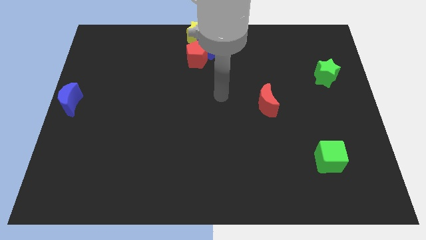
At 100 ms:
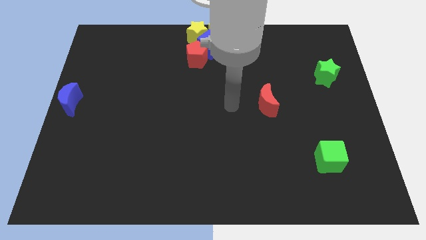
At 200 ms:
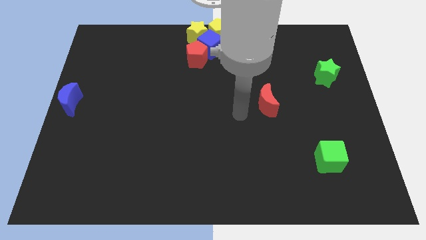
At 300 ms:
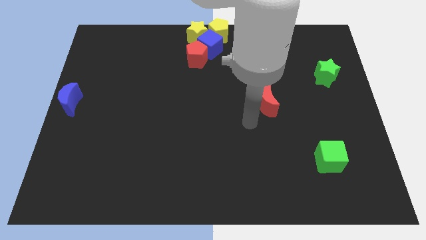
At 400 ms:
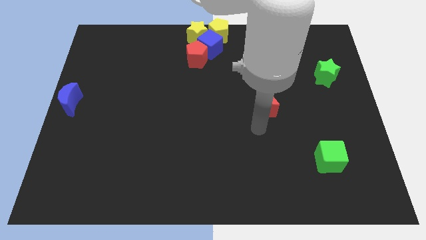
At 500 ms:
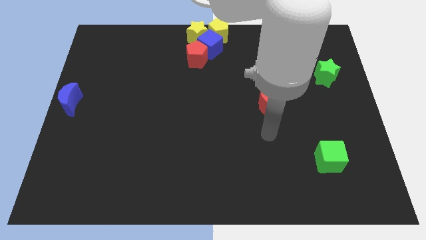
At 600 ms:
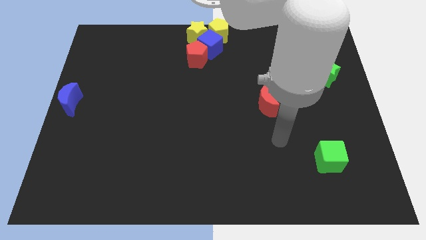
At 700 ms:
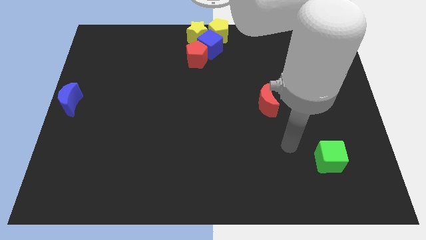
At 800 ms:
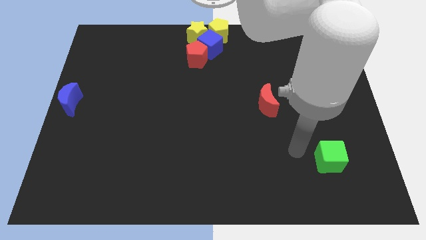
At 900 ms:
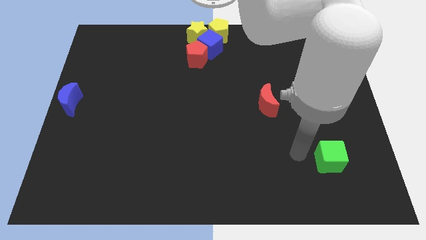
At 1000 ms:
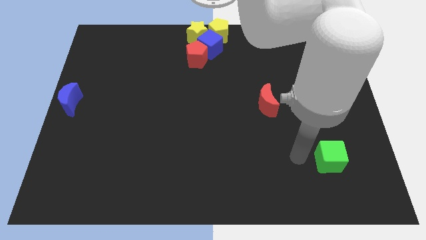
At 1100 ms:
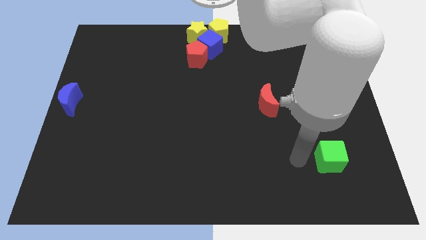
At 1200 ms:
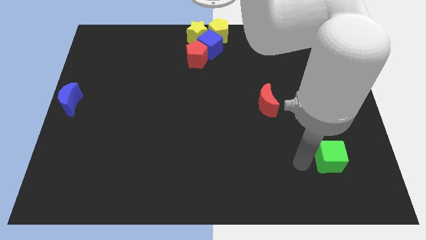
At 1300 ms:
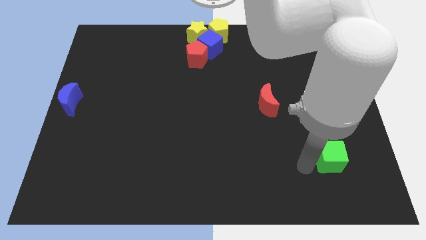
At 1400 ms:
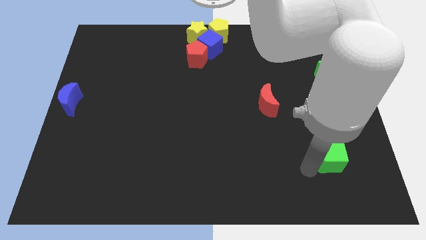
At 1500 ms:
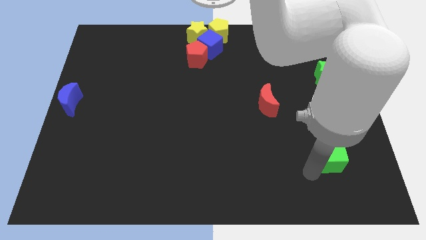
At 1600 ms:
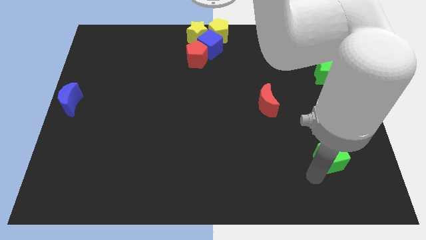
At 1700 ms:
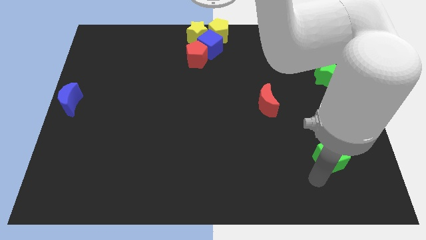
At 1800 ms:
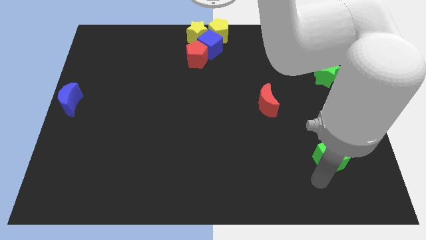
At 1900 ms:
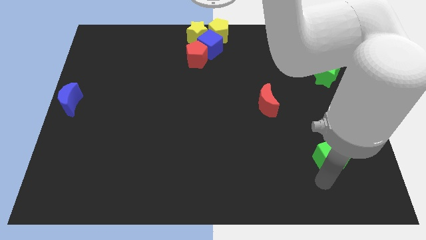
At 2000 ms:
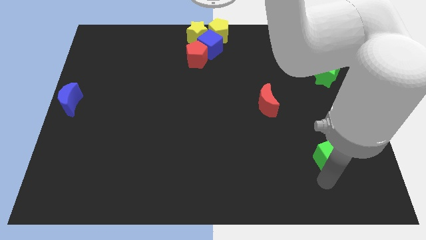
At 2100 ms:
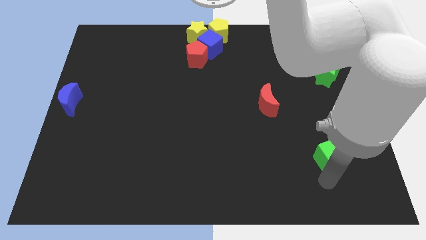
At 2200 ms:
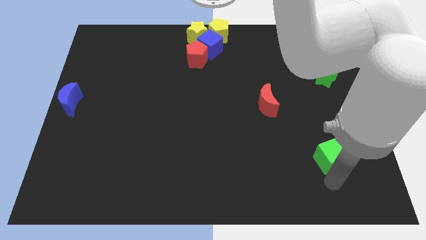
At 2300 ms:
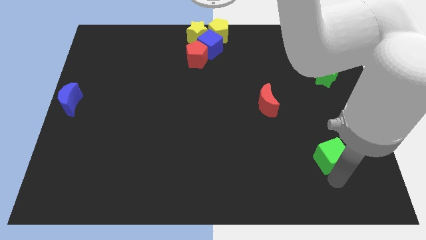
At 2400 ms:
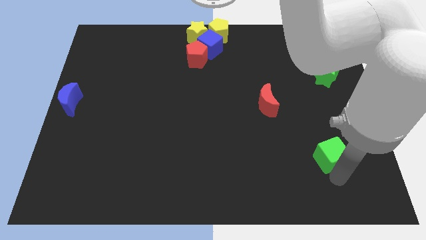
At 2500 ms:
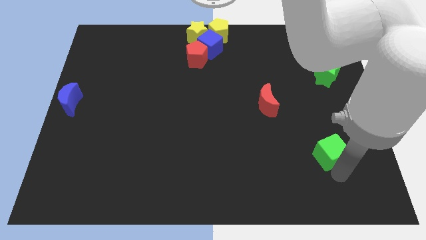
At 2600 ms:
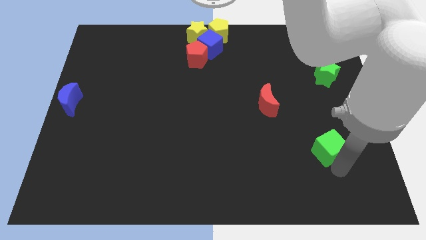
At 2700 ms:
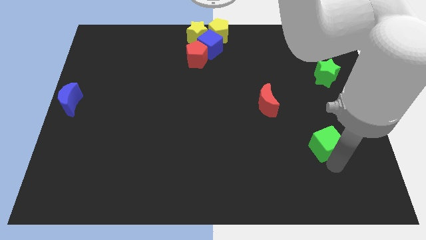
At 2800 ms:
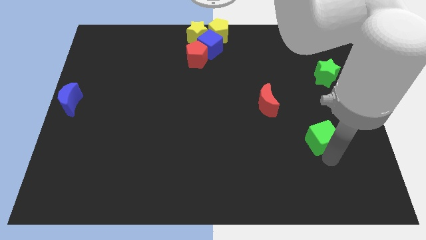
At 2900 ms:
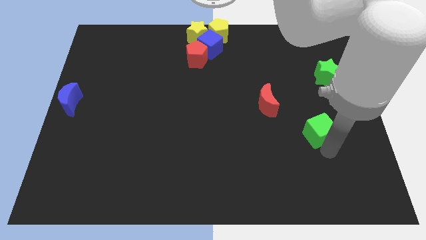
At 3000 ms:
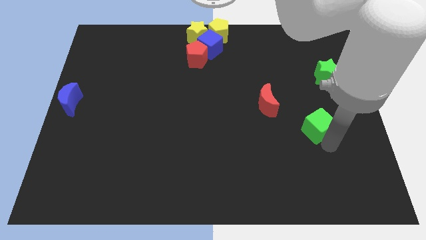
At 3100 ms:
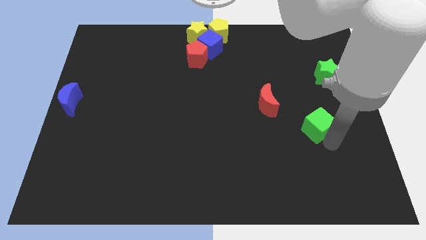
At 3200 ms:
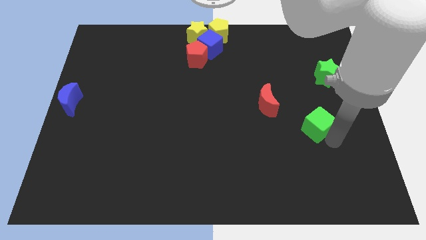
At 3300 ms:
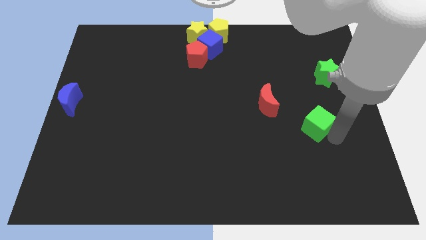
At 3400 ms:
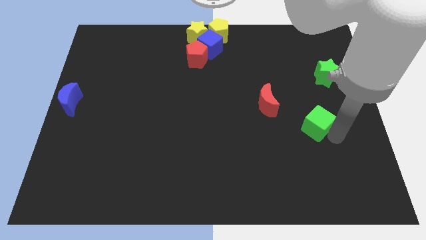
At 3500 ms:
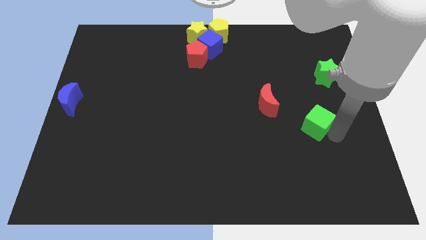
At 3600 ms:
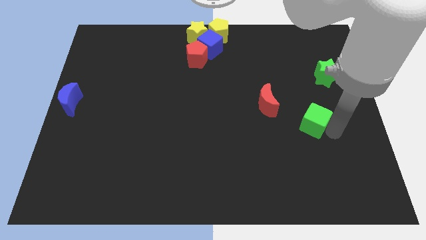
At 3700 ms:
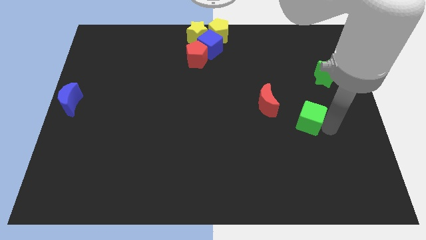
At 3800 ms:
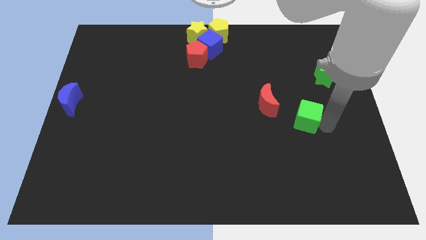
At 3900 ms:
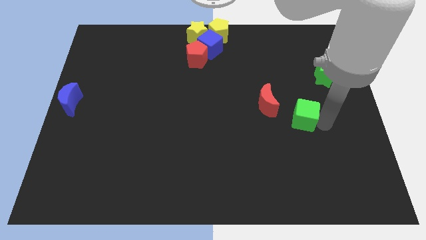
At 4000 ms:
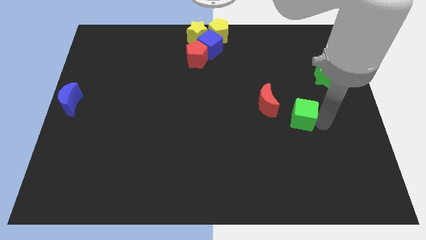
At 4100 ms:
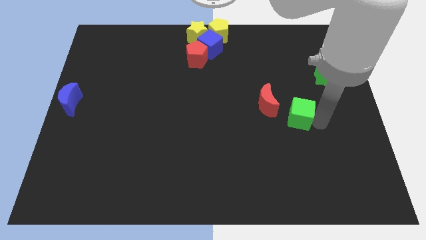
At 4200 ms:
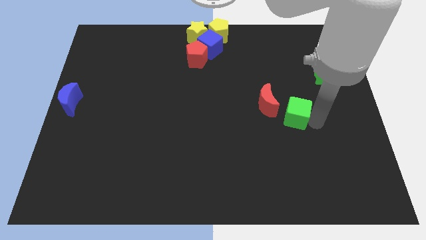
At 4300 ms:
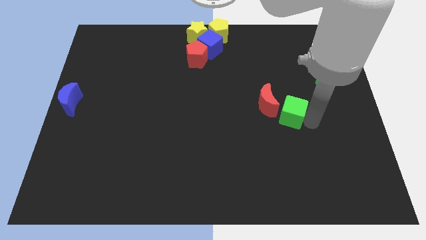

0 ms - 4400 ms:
push the green cube towards the red crescent

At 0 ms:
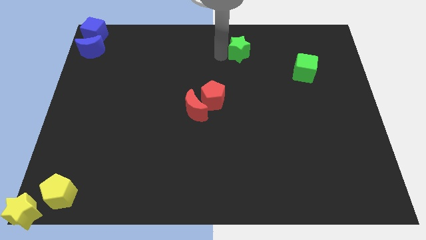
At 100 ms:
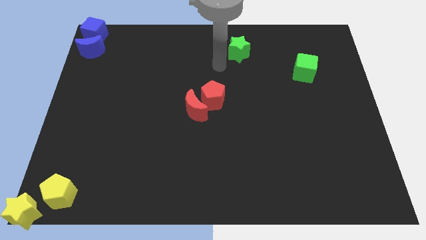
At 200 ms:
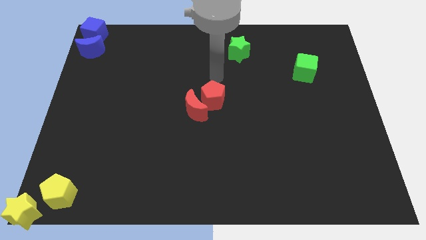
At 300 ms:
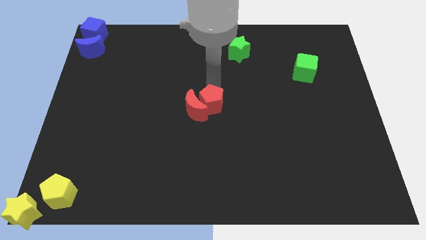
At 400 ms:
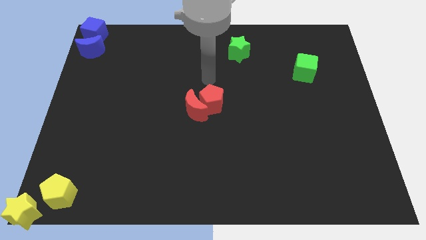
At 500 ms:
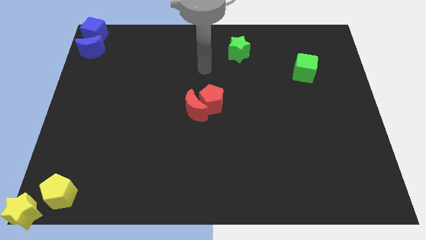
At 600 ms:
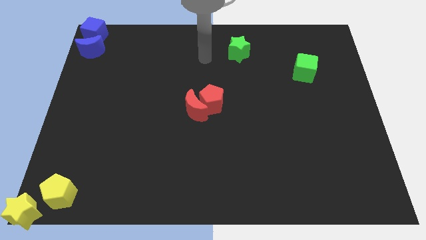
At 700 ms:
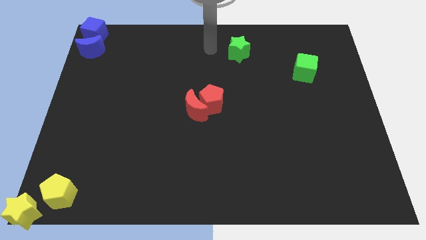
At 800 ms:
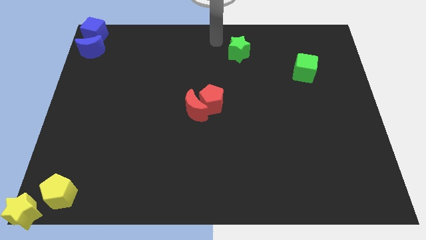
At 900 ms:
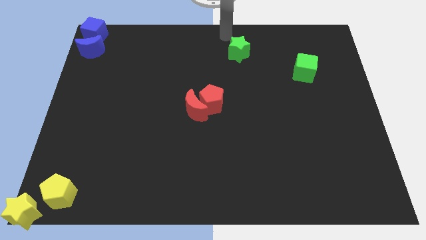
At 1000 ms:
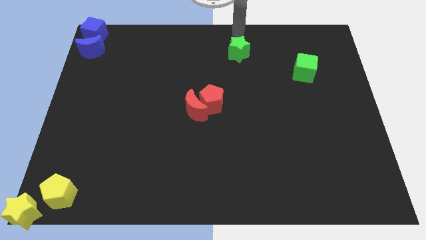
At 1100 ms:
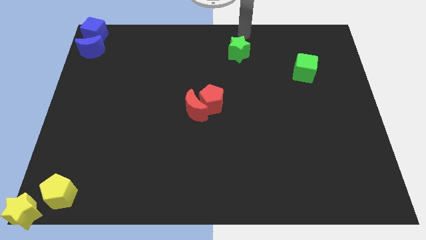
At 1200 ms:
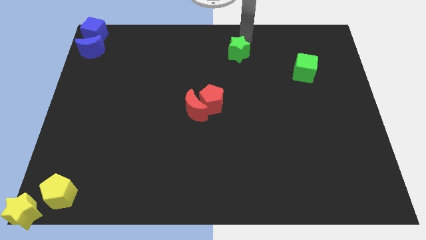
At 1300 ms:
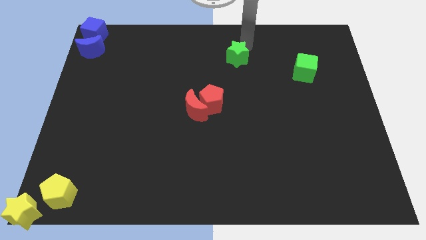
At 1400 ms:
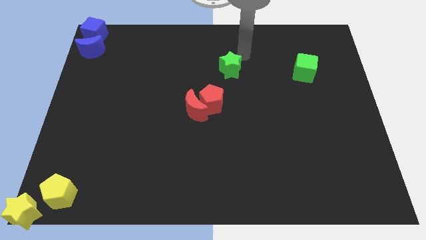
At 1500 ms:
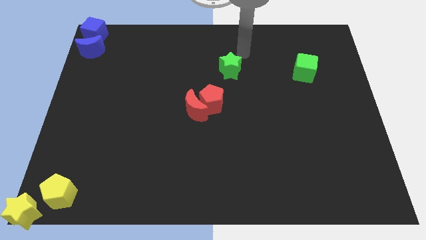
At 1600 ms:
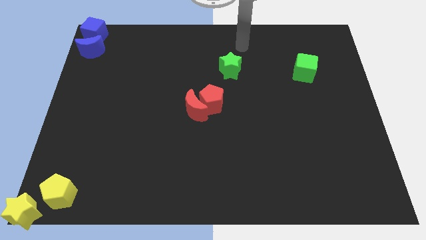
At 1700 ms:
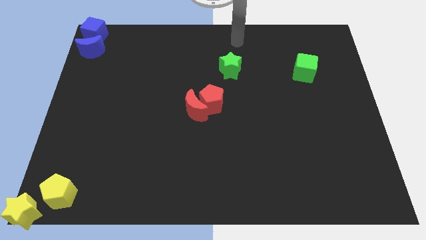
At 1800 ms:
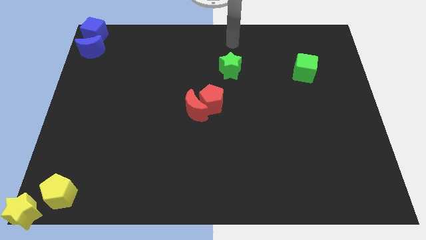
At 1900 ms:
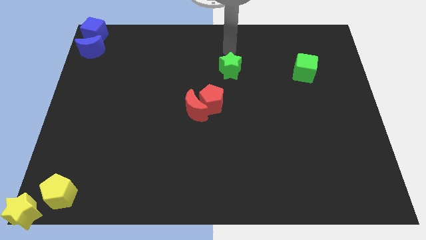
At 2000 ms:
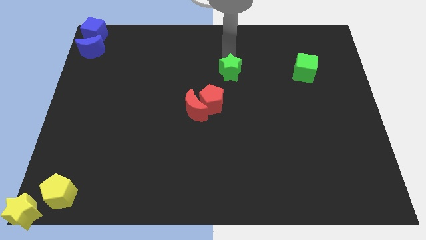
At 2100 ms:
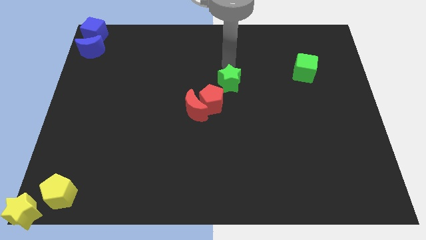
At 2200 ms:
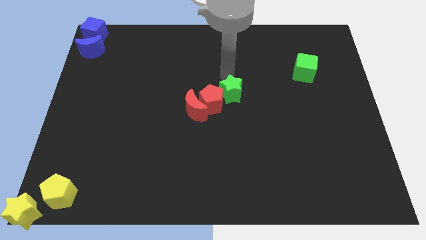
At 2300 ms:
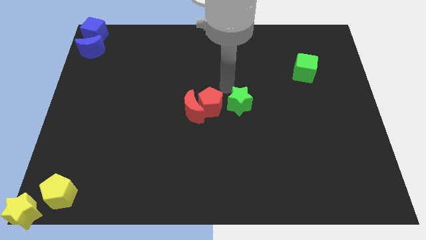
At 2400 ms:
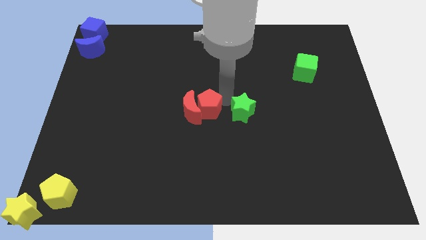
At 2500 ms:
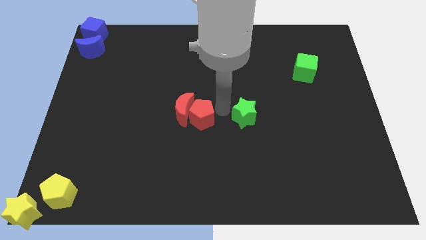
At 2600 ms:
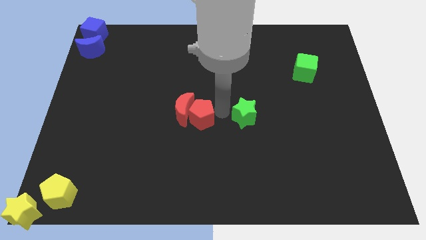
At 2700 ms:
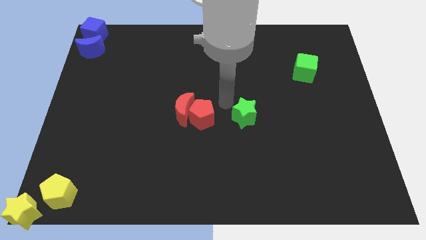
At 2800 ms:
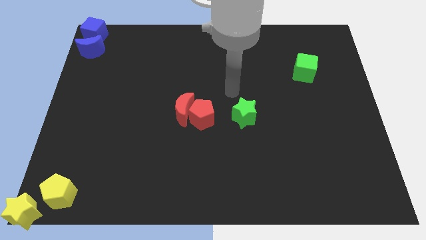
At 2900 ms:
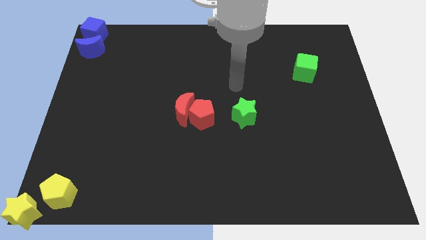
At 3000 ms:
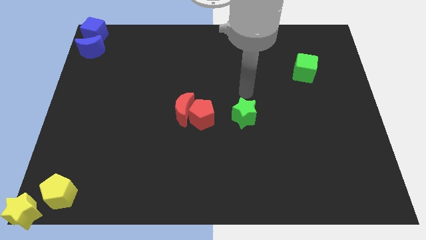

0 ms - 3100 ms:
place the green star right side of red penatgon

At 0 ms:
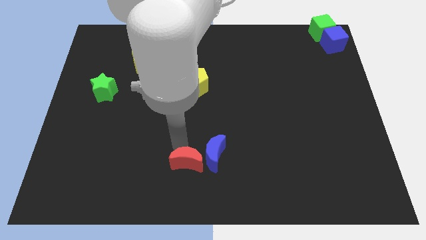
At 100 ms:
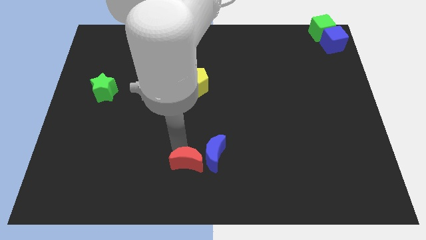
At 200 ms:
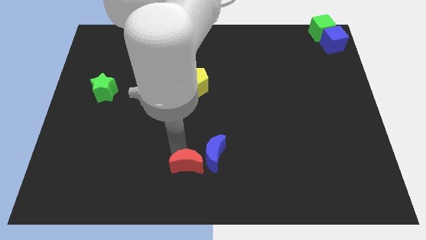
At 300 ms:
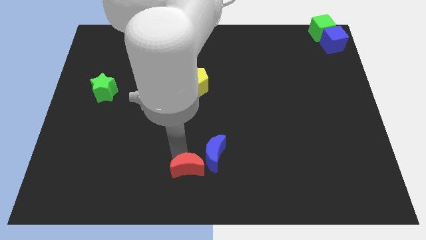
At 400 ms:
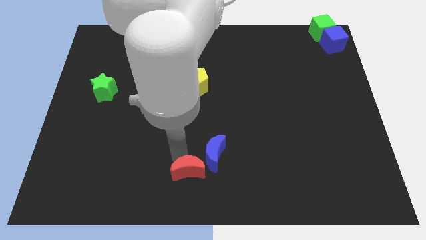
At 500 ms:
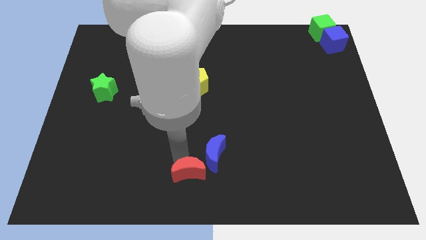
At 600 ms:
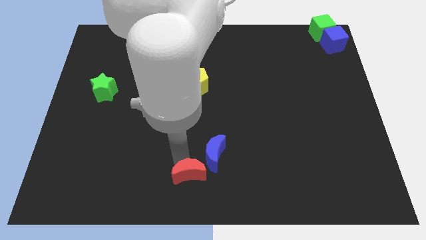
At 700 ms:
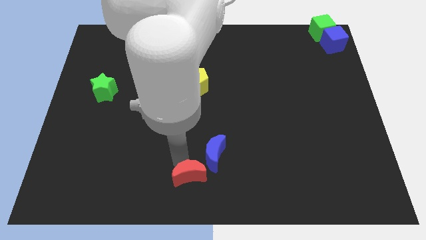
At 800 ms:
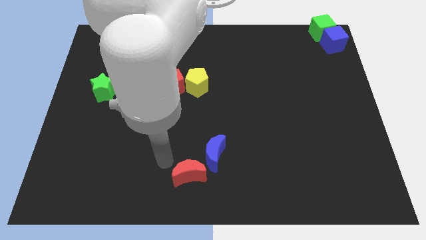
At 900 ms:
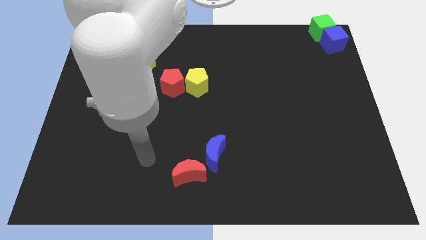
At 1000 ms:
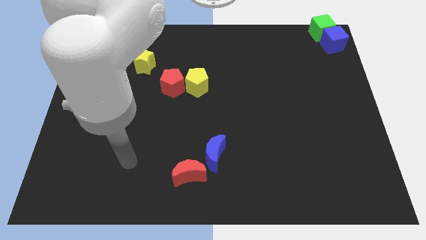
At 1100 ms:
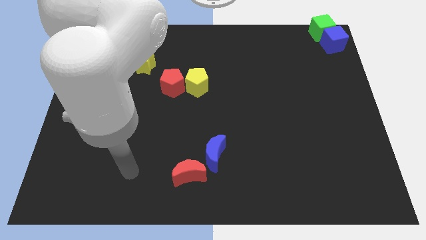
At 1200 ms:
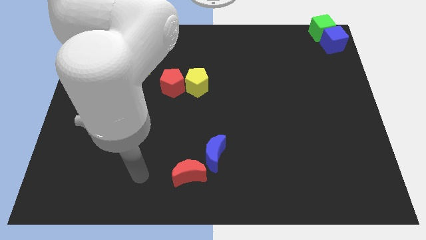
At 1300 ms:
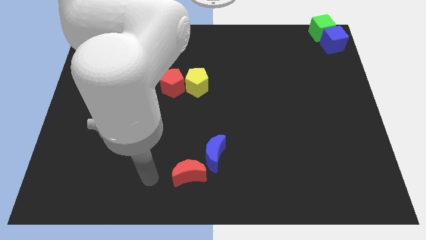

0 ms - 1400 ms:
push the red crescent slightly to the bottom

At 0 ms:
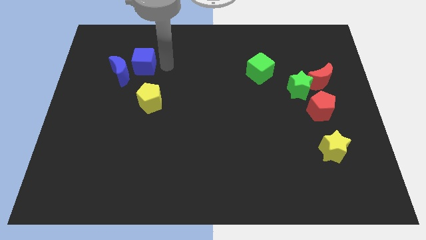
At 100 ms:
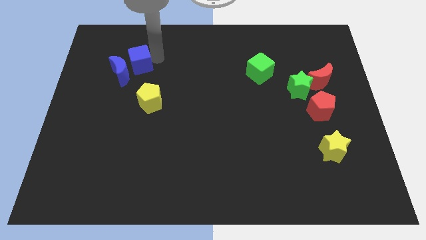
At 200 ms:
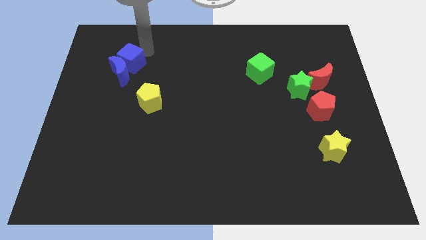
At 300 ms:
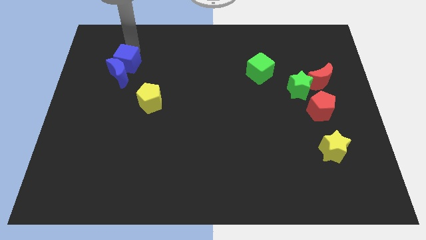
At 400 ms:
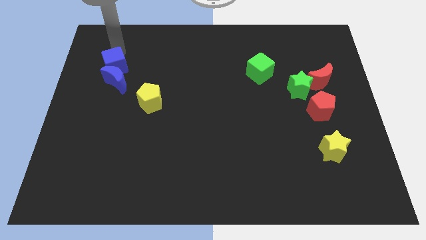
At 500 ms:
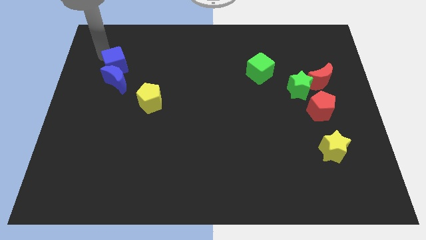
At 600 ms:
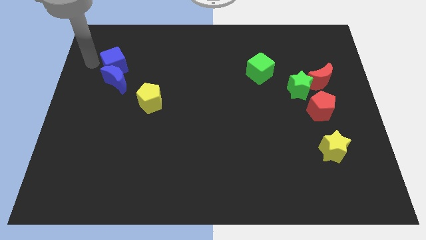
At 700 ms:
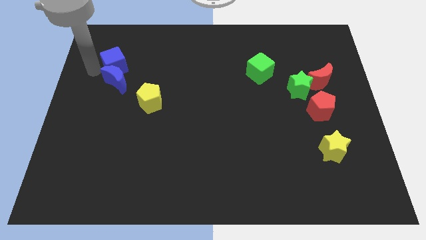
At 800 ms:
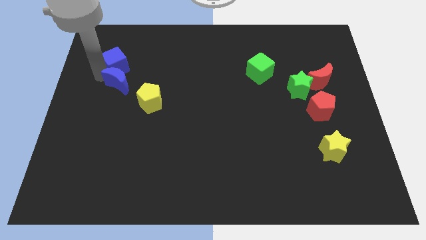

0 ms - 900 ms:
place the blue cube above the blue crescent
